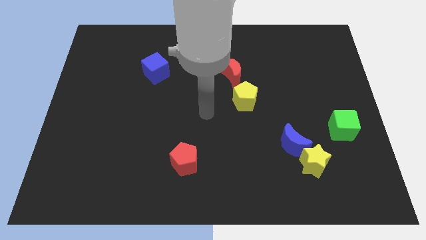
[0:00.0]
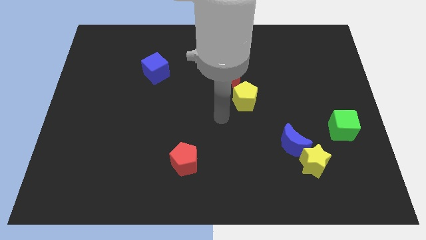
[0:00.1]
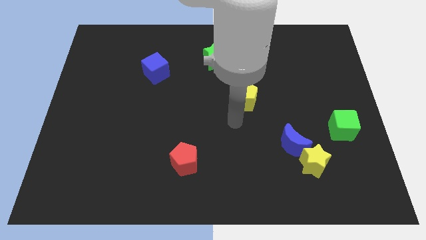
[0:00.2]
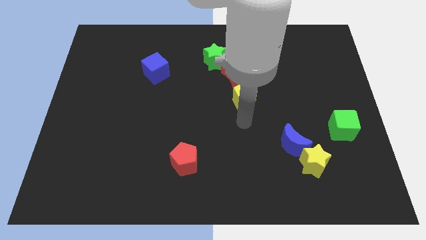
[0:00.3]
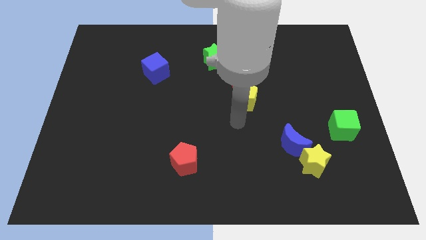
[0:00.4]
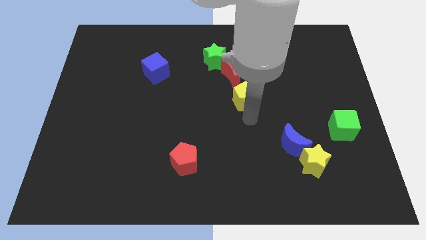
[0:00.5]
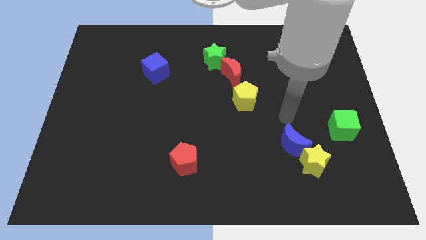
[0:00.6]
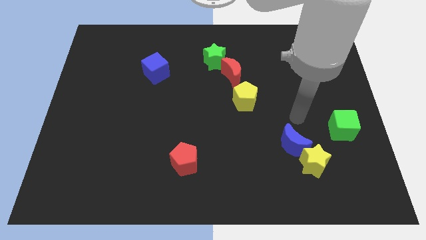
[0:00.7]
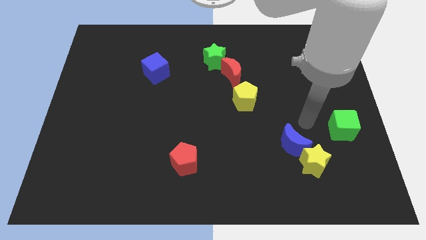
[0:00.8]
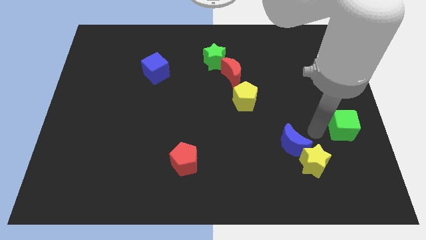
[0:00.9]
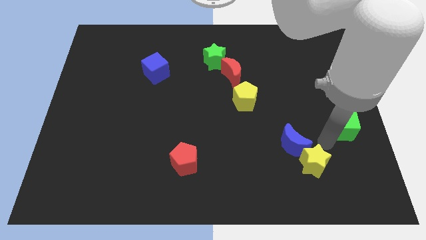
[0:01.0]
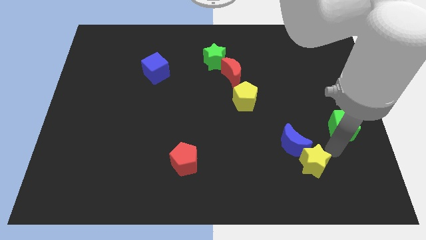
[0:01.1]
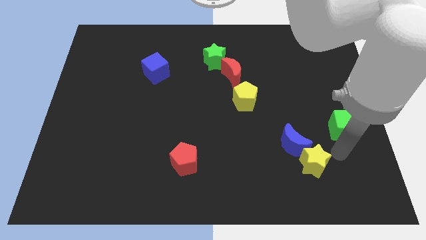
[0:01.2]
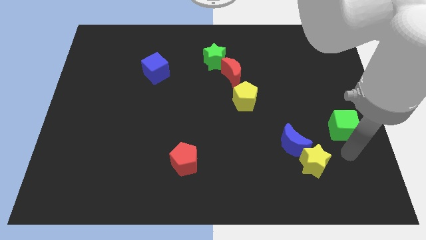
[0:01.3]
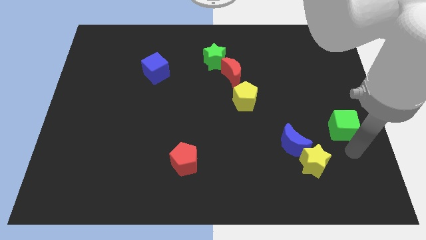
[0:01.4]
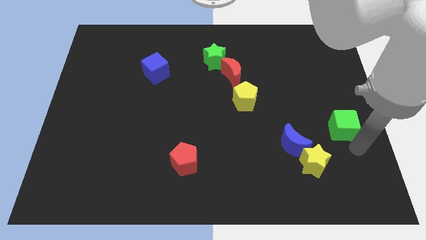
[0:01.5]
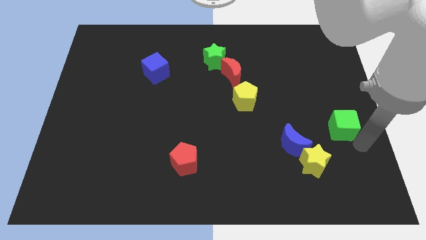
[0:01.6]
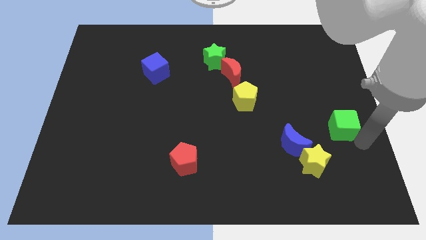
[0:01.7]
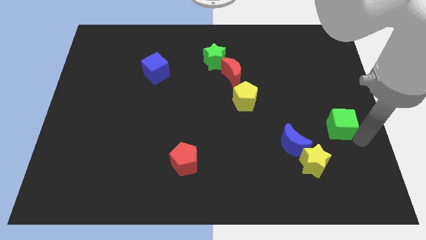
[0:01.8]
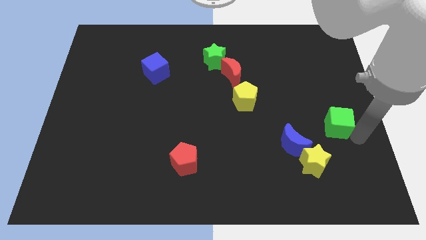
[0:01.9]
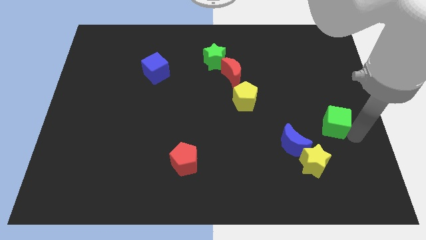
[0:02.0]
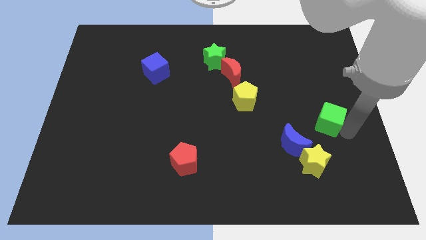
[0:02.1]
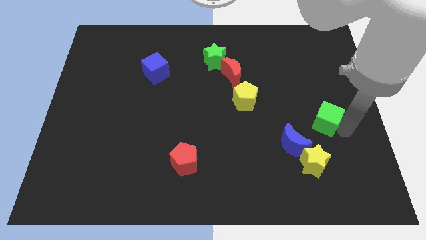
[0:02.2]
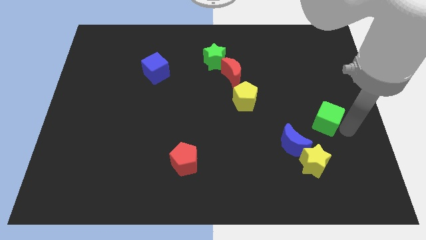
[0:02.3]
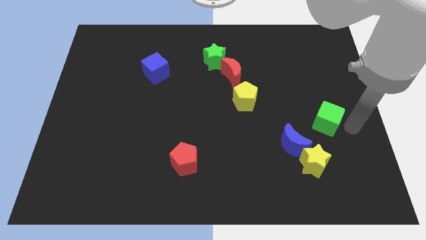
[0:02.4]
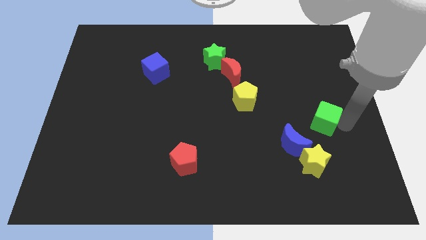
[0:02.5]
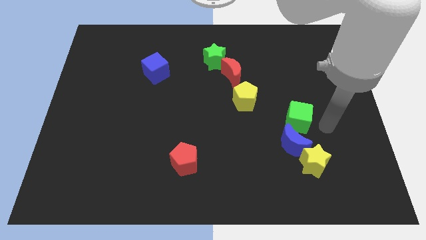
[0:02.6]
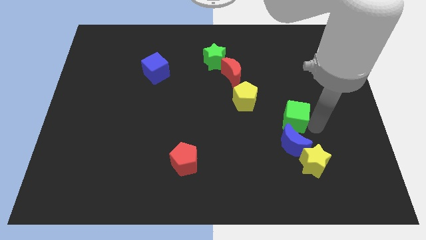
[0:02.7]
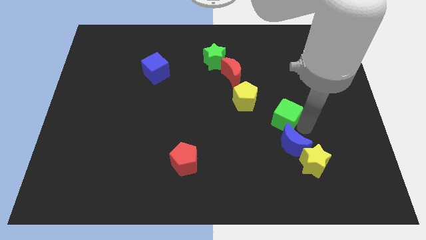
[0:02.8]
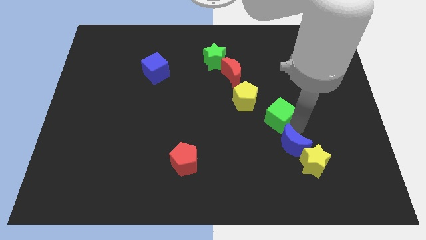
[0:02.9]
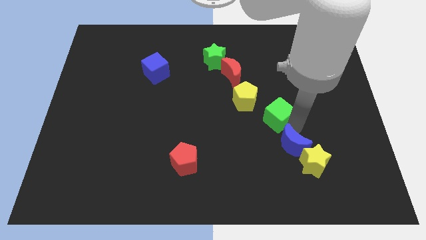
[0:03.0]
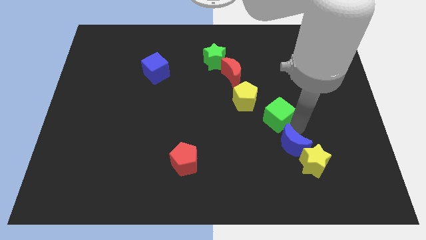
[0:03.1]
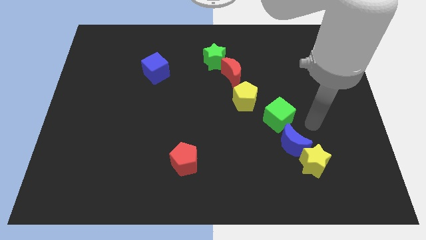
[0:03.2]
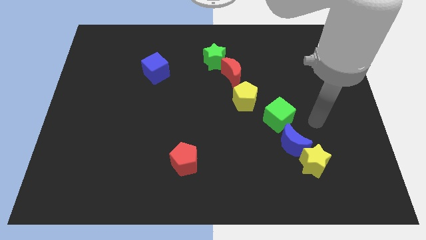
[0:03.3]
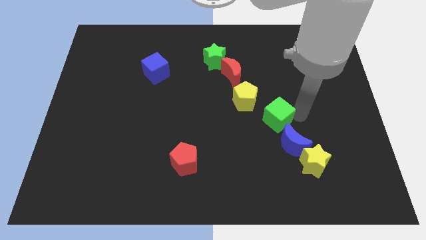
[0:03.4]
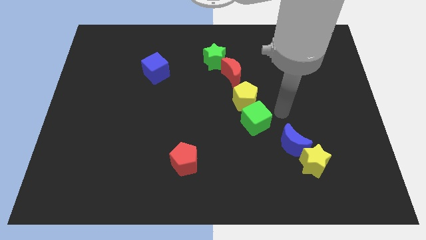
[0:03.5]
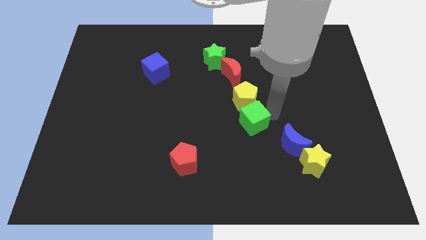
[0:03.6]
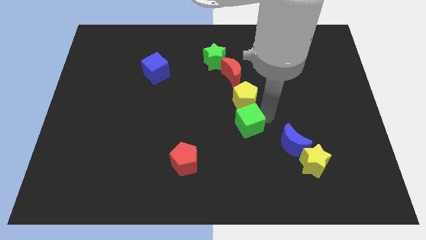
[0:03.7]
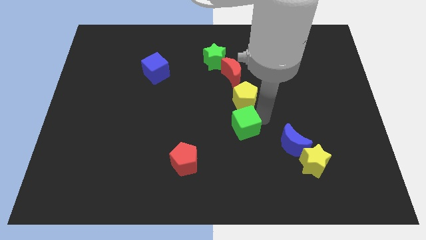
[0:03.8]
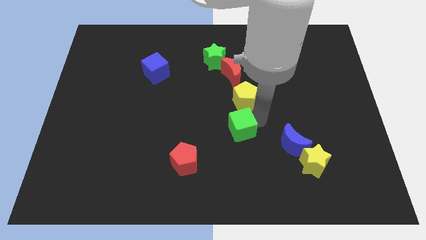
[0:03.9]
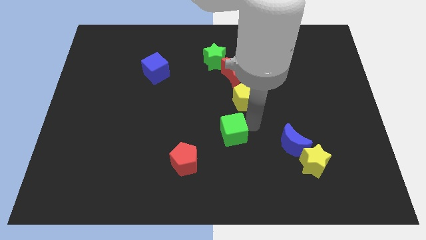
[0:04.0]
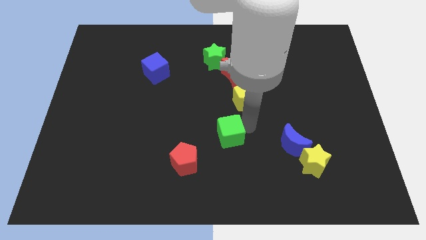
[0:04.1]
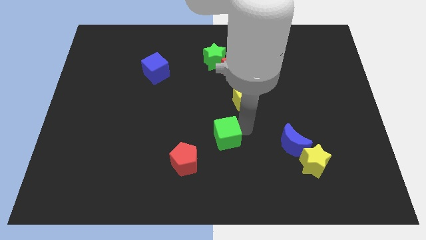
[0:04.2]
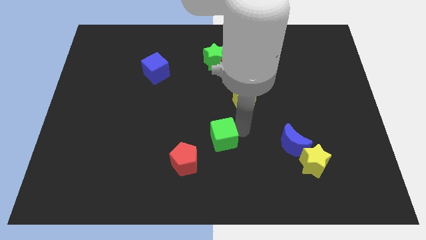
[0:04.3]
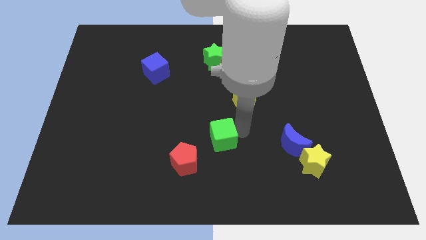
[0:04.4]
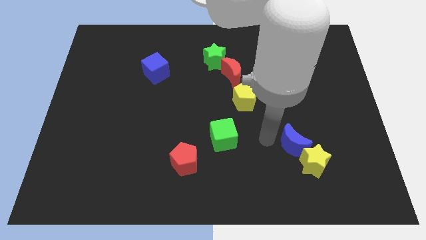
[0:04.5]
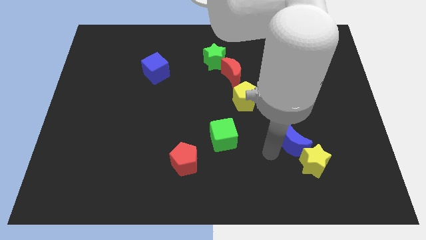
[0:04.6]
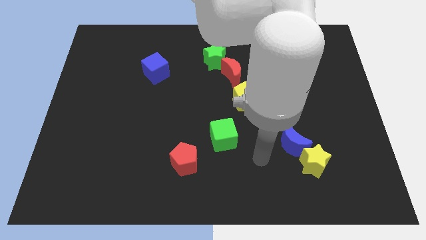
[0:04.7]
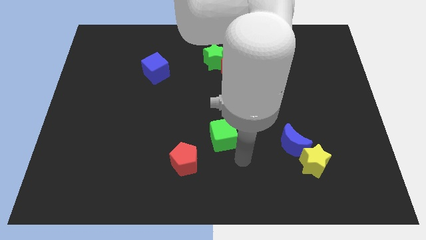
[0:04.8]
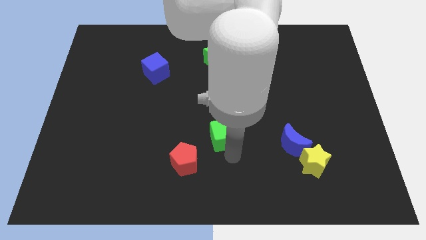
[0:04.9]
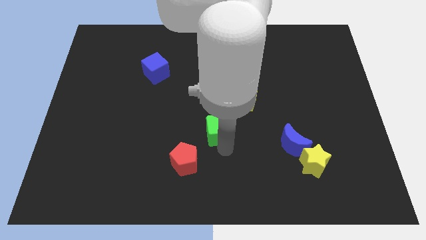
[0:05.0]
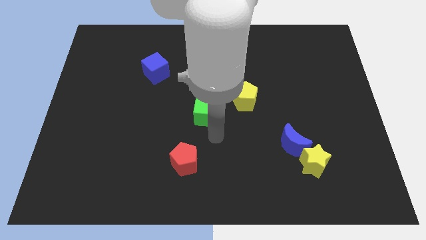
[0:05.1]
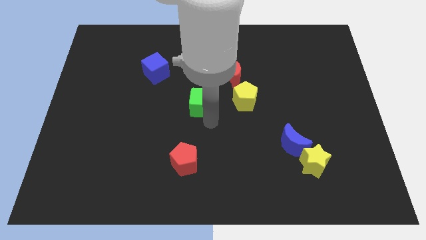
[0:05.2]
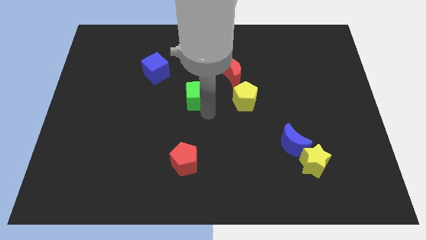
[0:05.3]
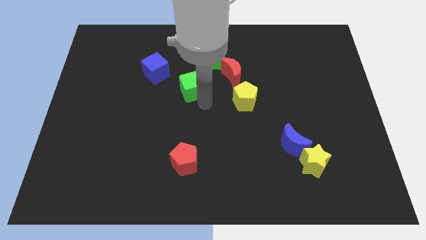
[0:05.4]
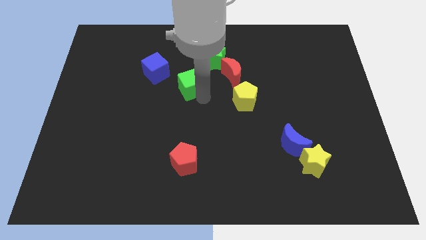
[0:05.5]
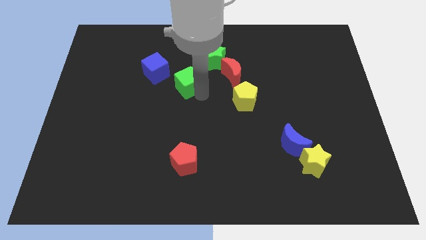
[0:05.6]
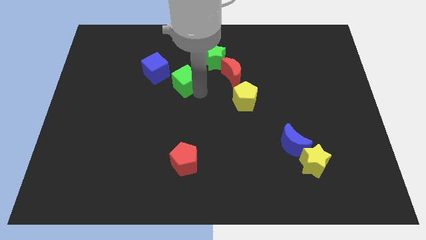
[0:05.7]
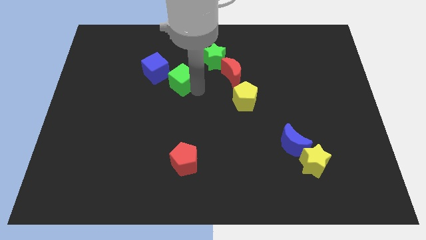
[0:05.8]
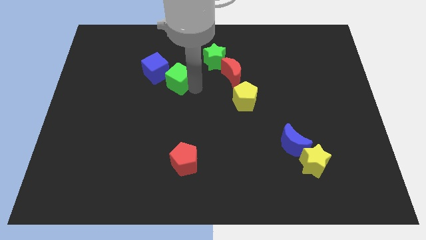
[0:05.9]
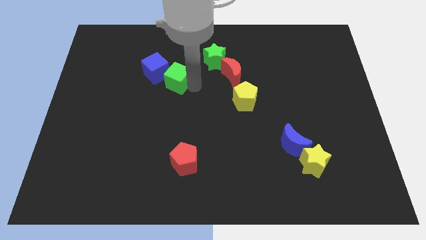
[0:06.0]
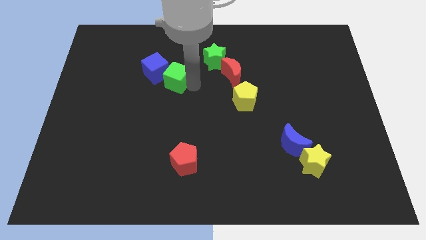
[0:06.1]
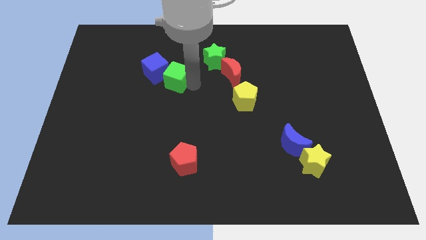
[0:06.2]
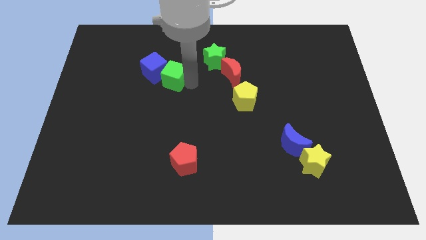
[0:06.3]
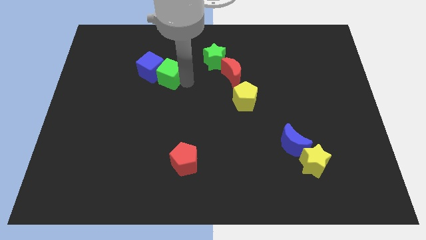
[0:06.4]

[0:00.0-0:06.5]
slide the green cube towards the blue cube

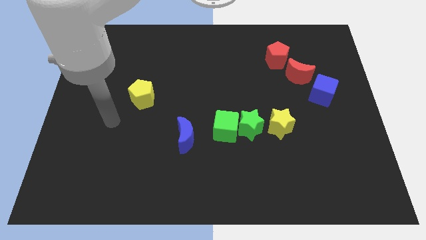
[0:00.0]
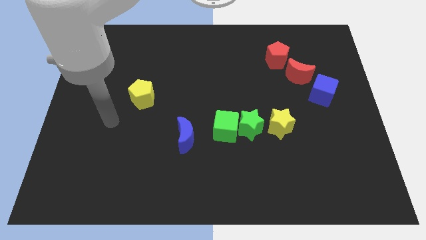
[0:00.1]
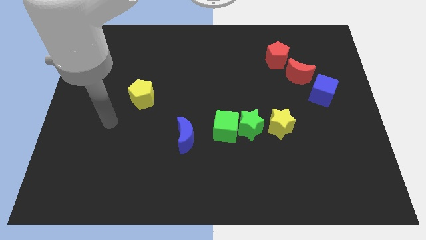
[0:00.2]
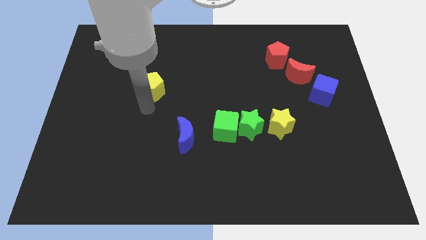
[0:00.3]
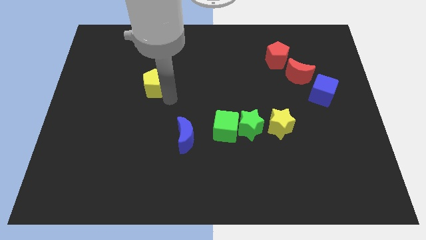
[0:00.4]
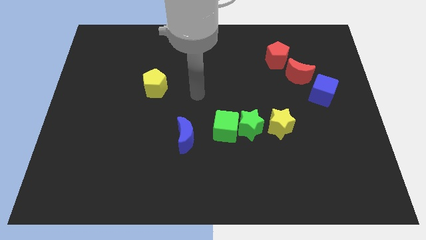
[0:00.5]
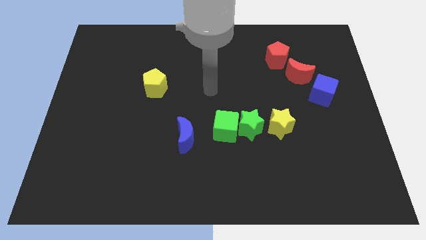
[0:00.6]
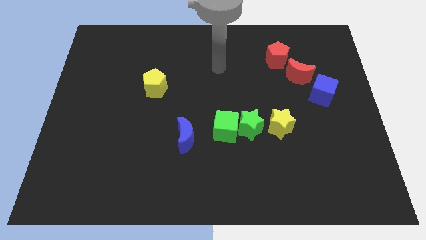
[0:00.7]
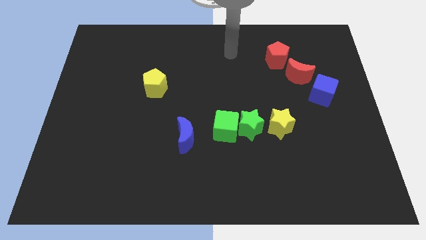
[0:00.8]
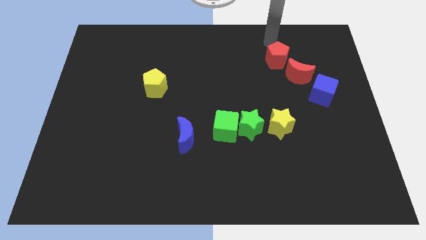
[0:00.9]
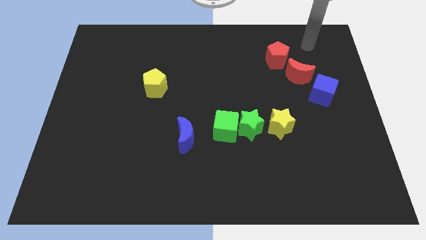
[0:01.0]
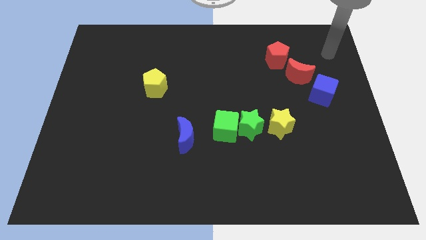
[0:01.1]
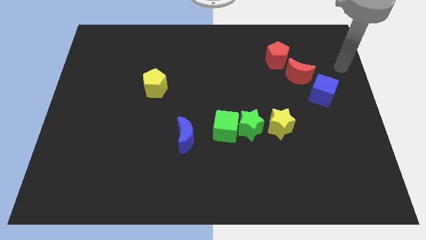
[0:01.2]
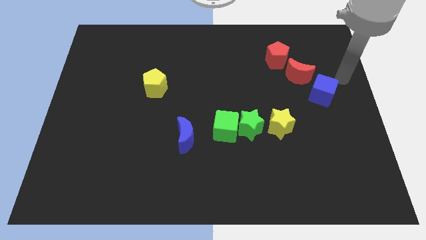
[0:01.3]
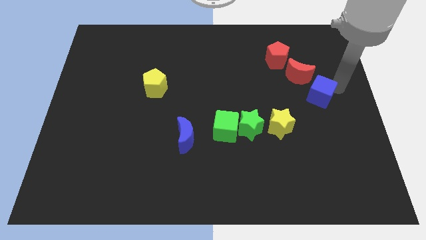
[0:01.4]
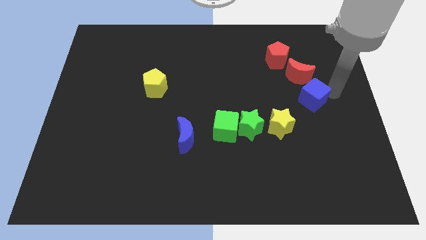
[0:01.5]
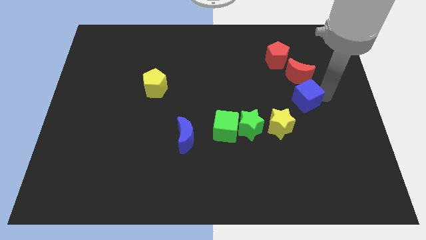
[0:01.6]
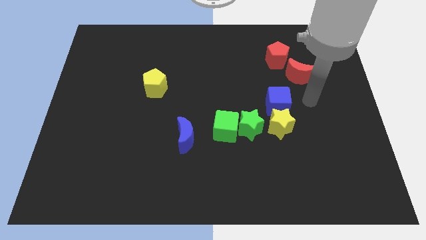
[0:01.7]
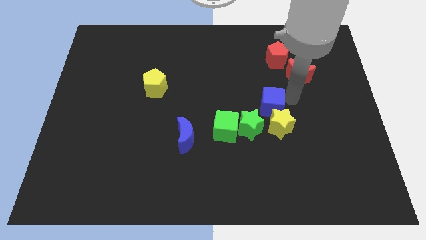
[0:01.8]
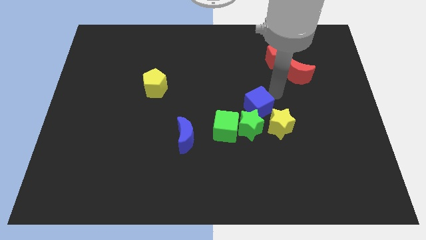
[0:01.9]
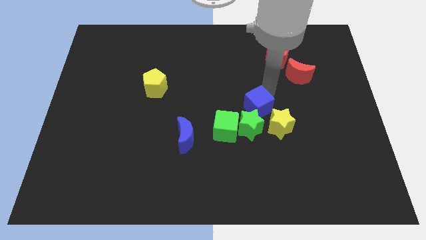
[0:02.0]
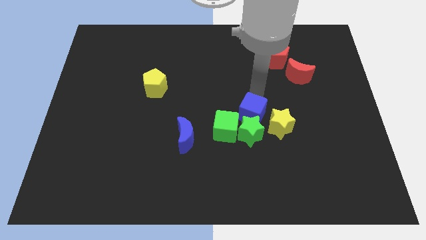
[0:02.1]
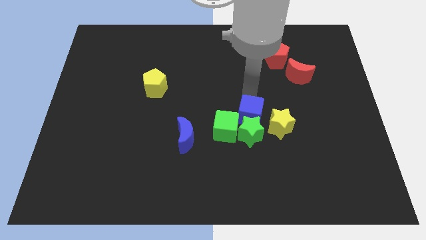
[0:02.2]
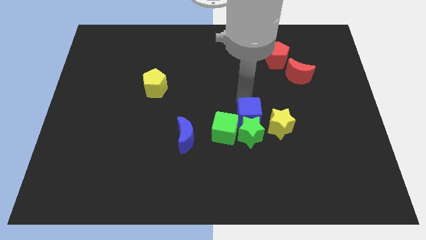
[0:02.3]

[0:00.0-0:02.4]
push the blue cube close to the green star
